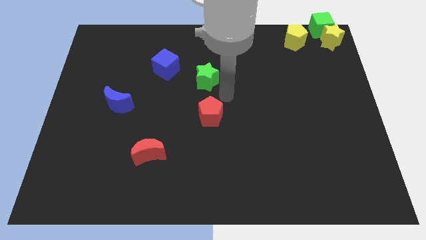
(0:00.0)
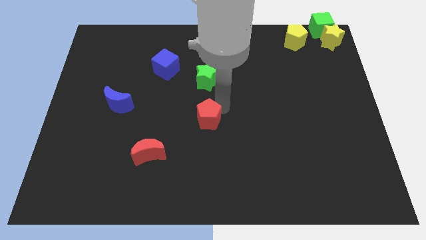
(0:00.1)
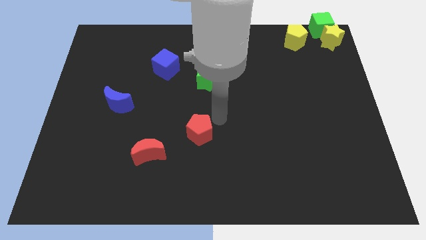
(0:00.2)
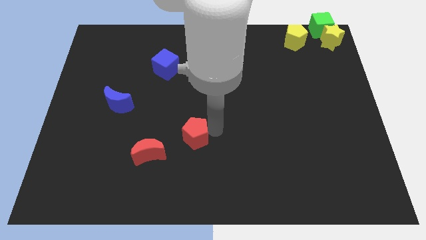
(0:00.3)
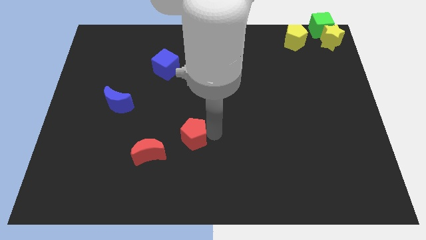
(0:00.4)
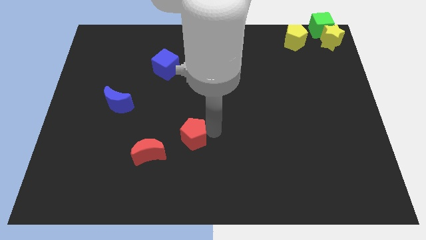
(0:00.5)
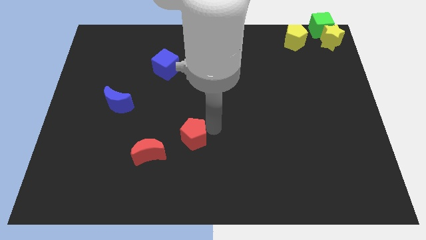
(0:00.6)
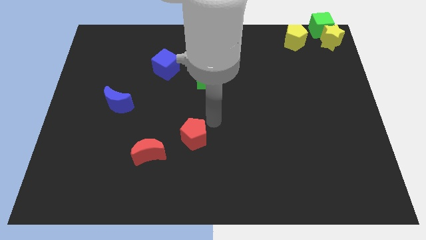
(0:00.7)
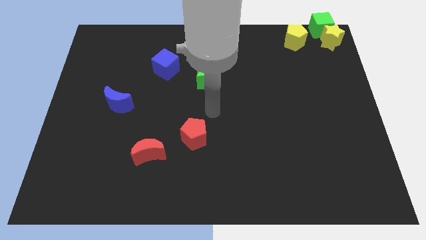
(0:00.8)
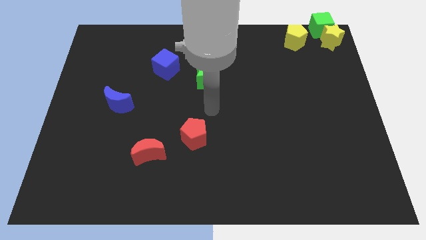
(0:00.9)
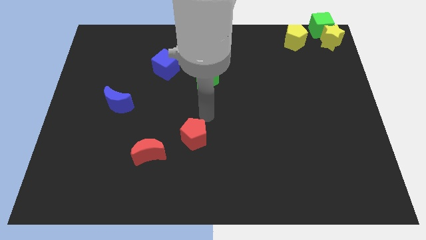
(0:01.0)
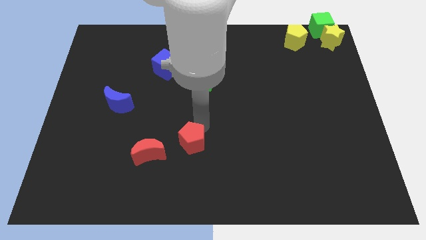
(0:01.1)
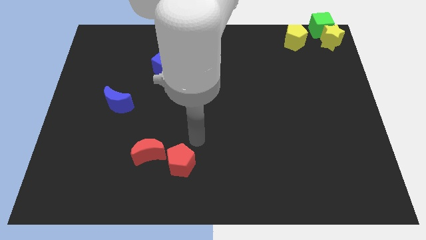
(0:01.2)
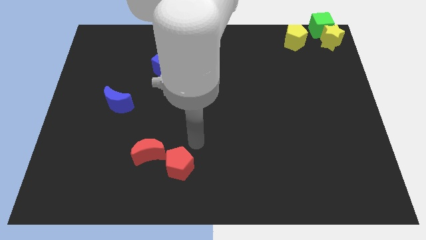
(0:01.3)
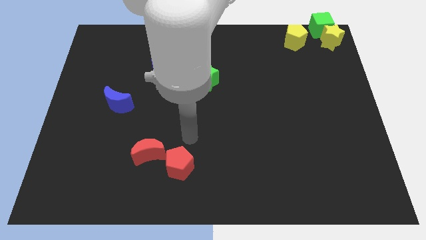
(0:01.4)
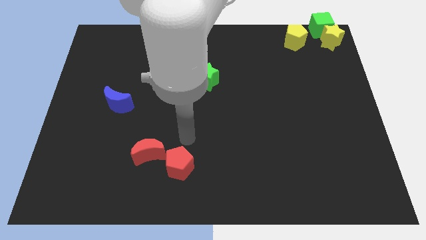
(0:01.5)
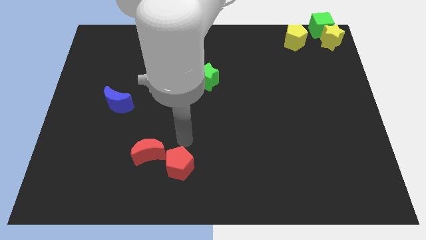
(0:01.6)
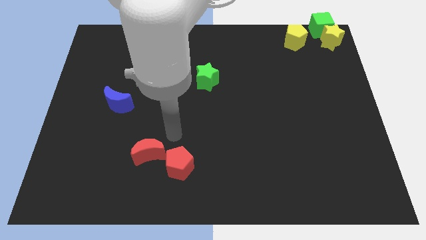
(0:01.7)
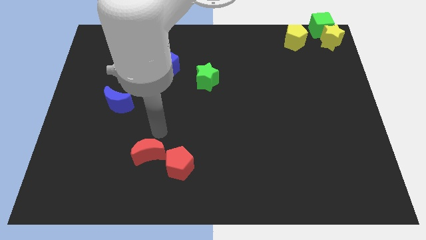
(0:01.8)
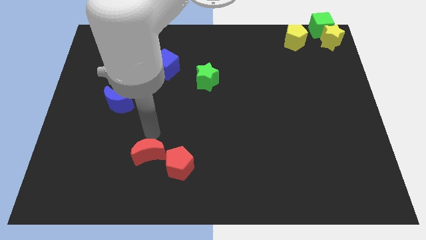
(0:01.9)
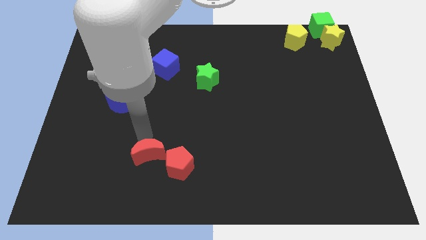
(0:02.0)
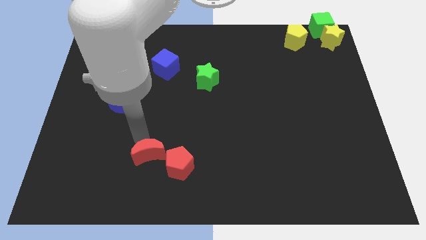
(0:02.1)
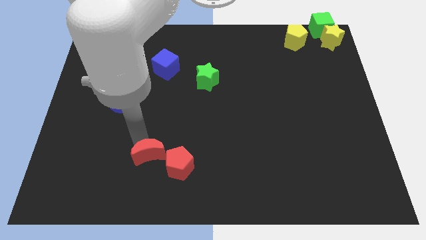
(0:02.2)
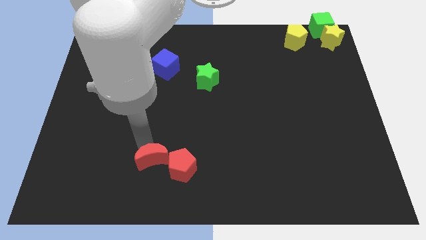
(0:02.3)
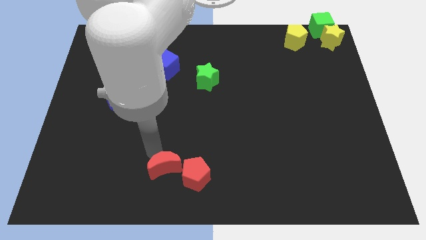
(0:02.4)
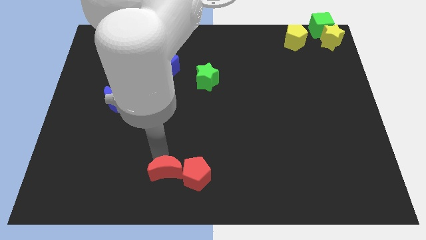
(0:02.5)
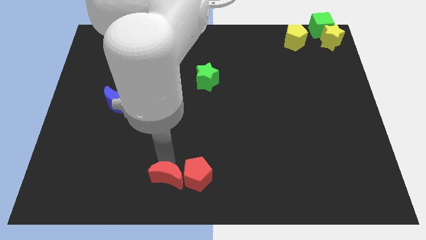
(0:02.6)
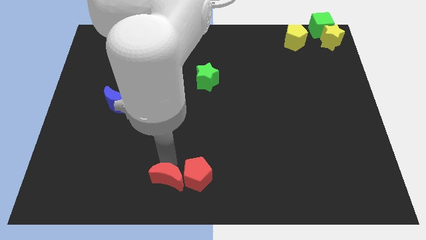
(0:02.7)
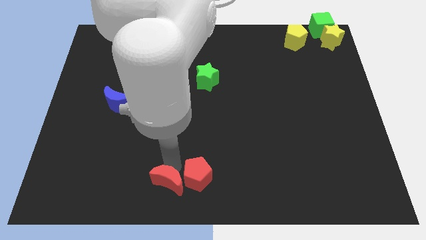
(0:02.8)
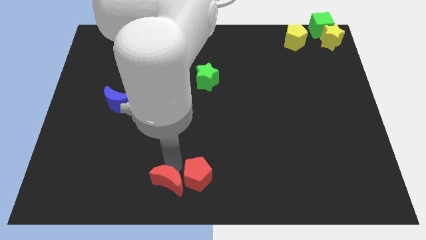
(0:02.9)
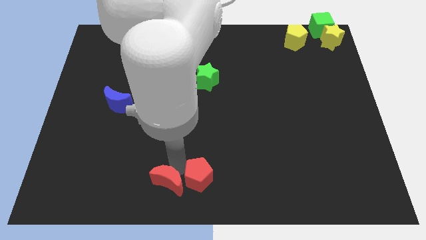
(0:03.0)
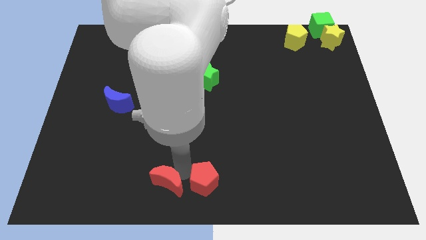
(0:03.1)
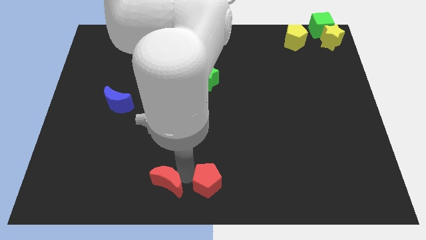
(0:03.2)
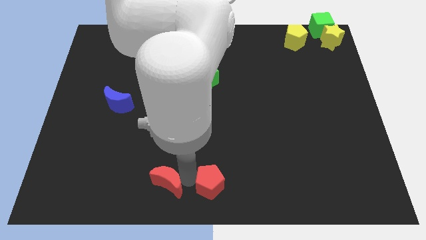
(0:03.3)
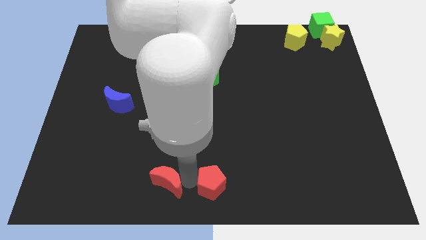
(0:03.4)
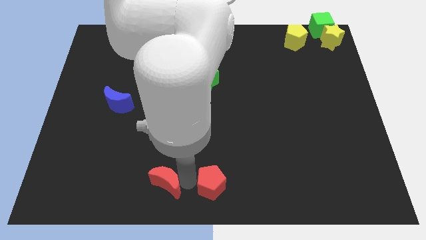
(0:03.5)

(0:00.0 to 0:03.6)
place your arm in between the red crescent and red pentagon

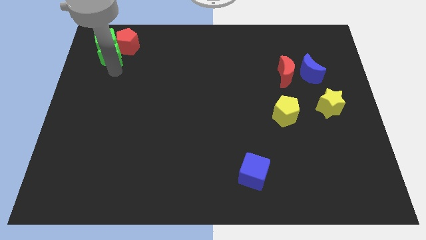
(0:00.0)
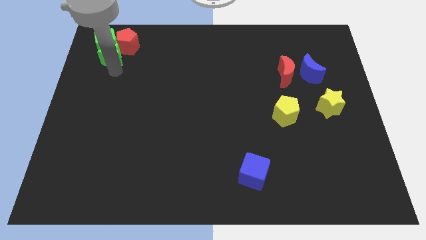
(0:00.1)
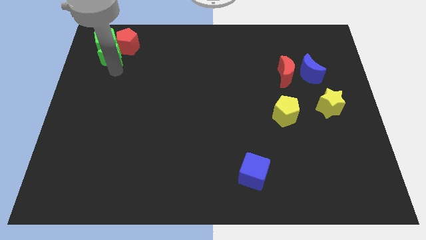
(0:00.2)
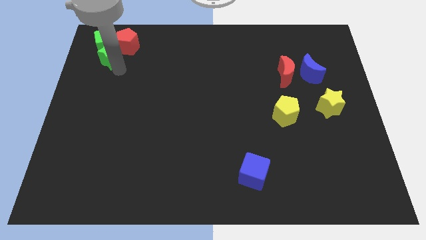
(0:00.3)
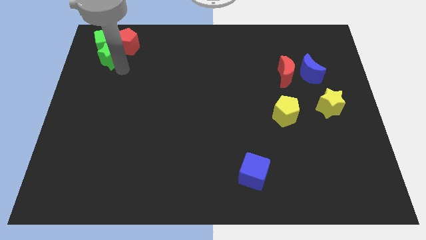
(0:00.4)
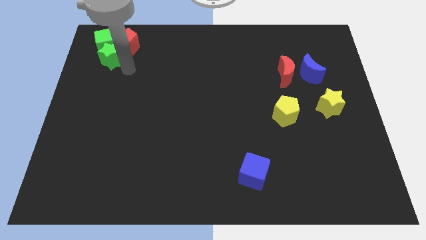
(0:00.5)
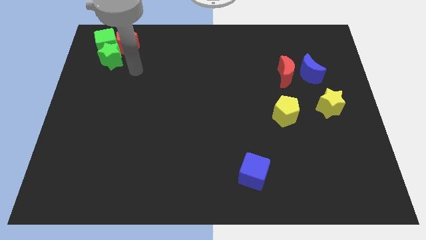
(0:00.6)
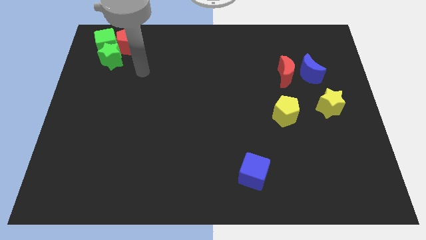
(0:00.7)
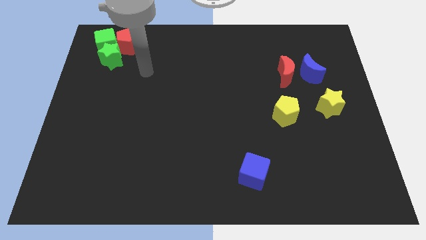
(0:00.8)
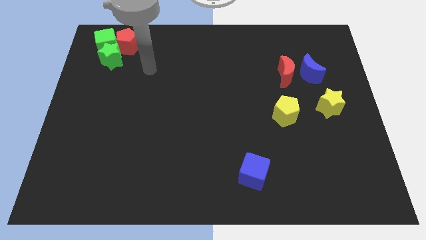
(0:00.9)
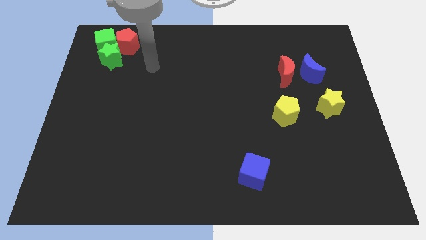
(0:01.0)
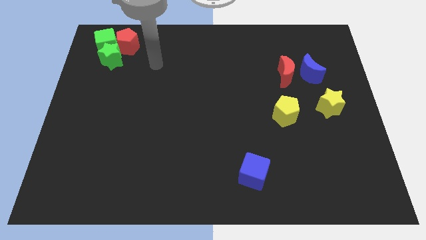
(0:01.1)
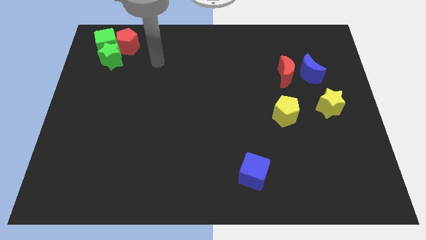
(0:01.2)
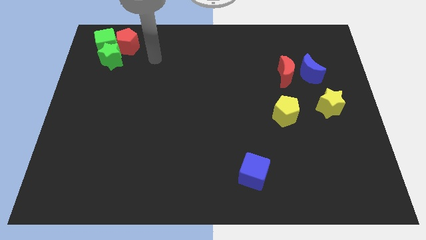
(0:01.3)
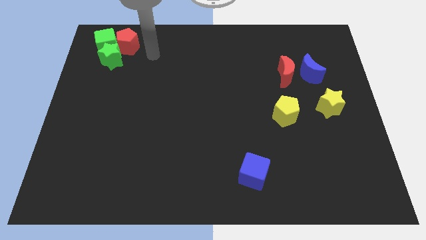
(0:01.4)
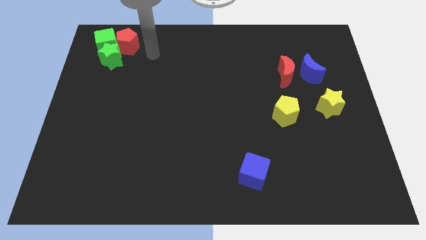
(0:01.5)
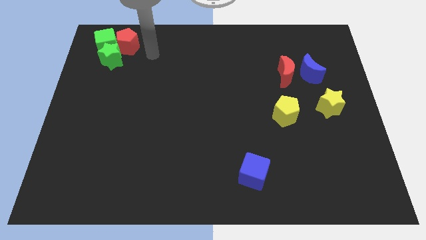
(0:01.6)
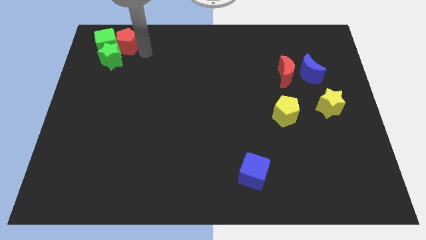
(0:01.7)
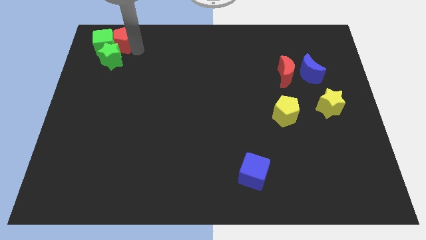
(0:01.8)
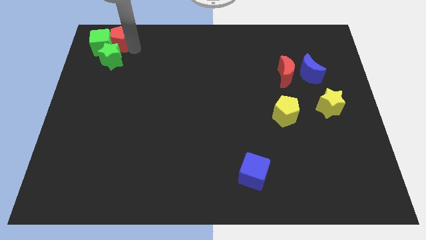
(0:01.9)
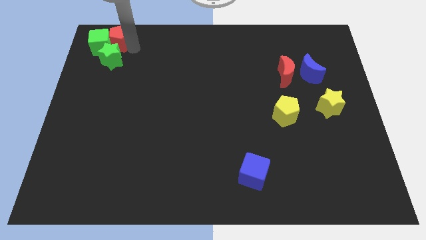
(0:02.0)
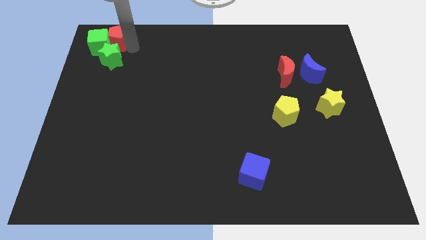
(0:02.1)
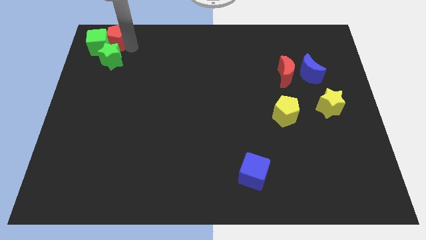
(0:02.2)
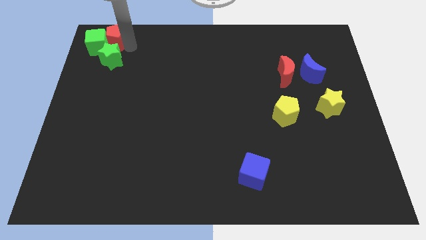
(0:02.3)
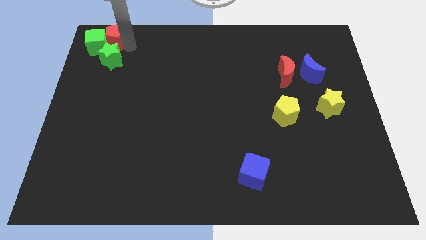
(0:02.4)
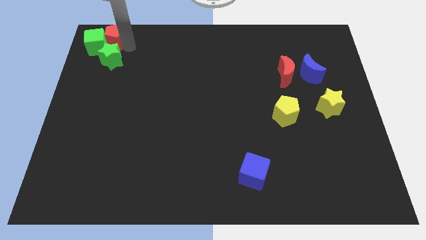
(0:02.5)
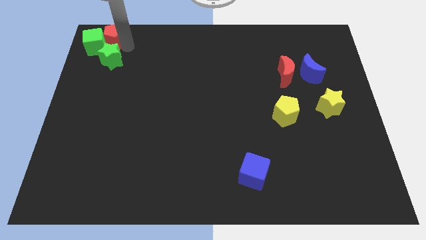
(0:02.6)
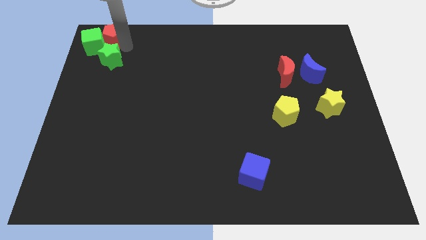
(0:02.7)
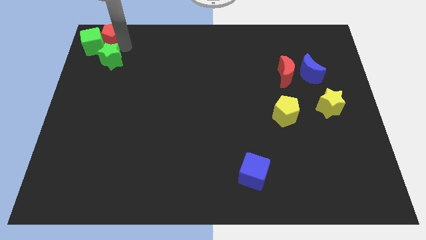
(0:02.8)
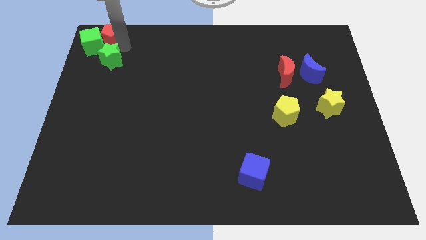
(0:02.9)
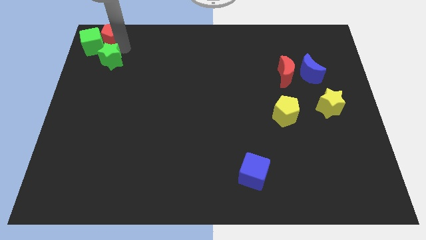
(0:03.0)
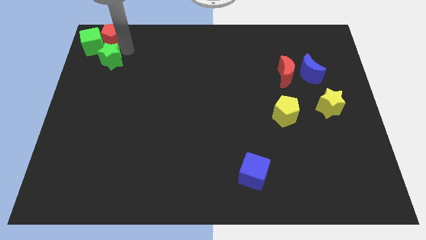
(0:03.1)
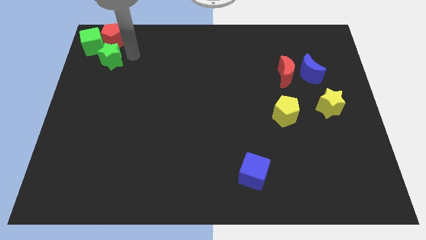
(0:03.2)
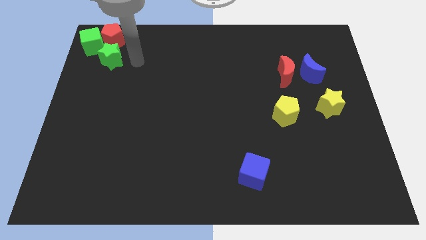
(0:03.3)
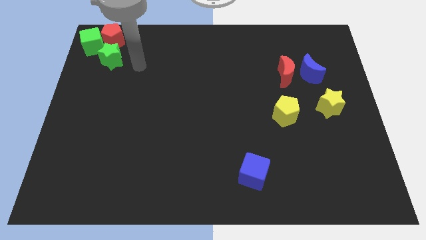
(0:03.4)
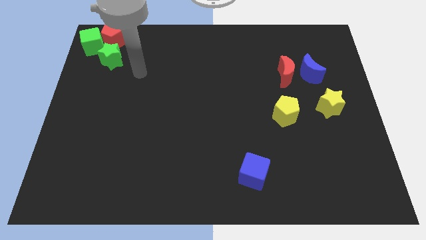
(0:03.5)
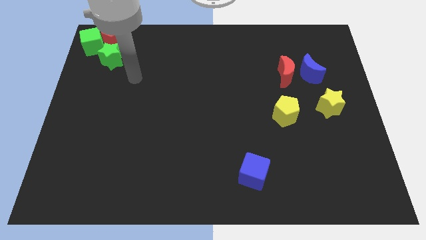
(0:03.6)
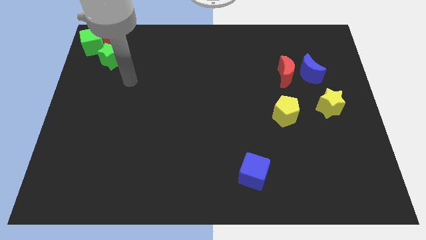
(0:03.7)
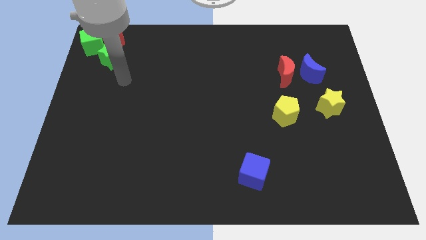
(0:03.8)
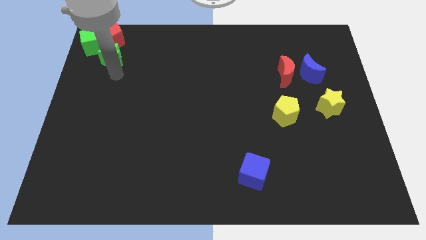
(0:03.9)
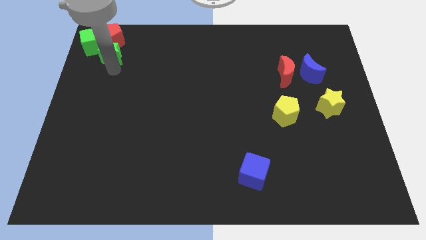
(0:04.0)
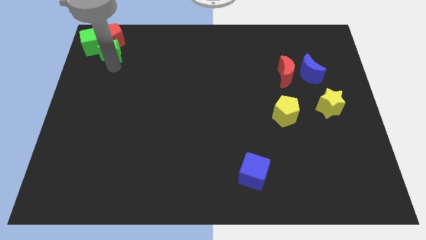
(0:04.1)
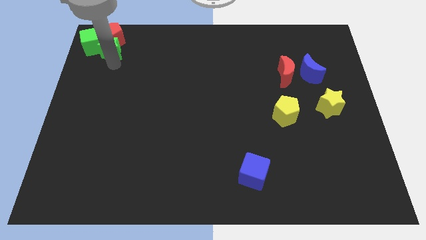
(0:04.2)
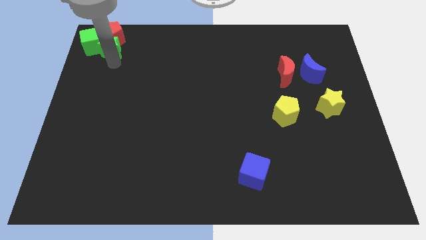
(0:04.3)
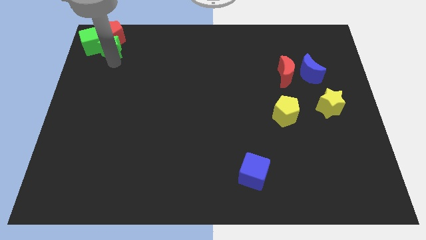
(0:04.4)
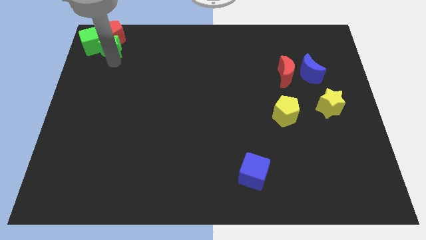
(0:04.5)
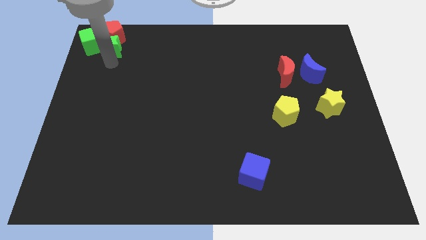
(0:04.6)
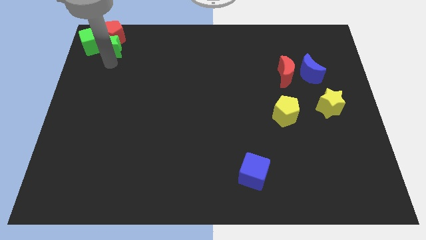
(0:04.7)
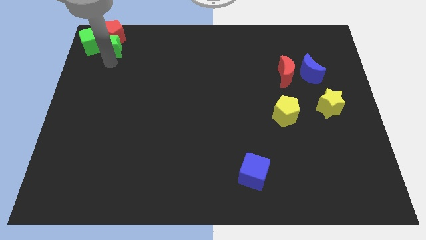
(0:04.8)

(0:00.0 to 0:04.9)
put the green blocks and the red block at the top left corner of the board

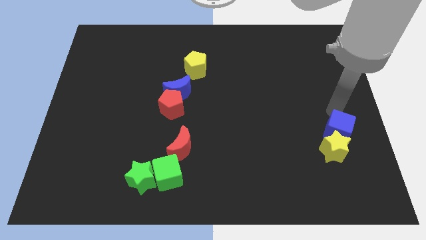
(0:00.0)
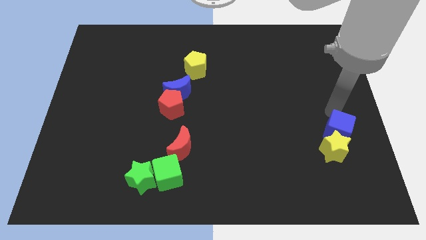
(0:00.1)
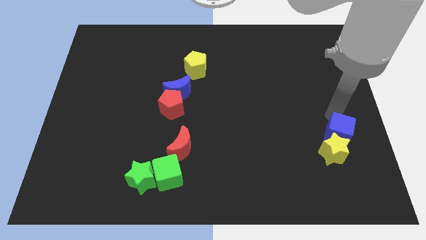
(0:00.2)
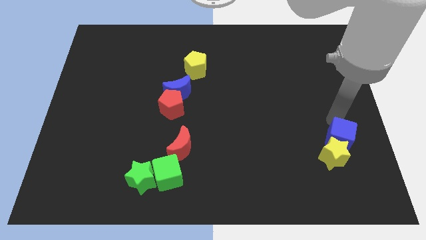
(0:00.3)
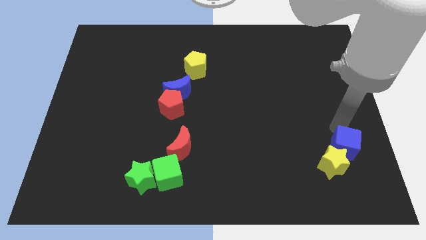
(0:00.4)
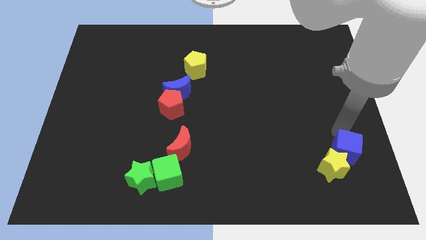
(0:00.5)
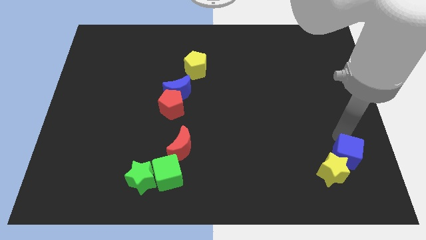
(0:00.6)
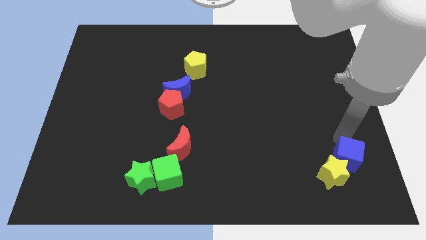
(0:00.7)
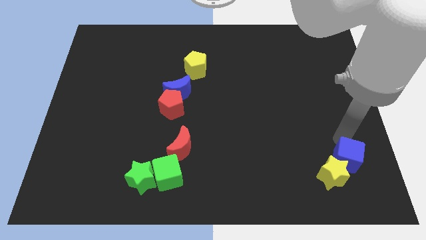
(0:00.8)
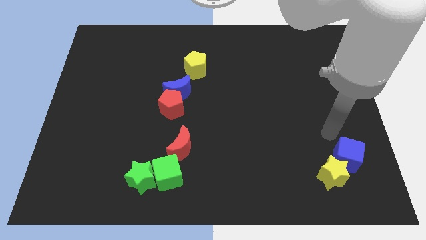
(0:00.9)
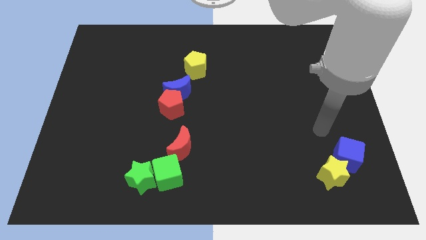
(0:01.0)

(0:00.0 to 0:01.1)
push the blue cube along with the yellow star slightly to the bottom
